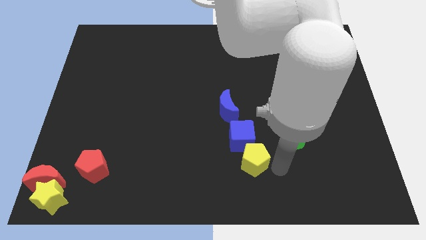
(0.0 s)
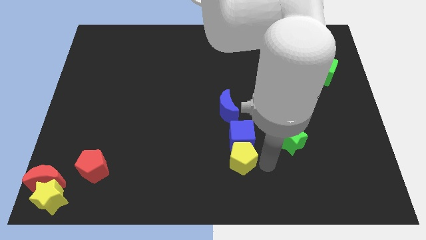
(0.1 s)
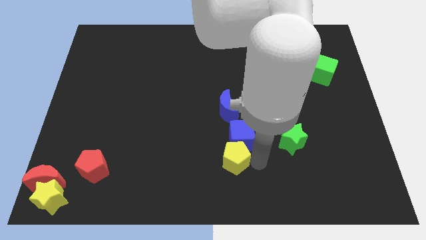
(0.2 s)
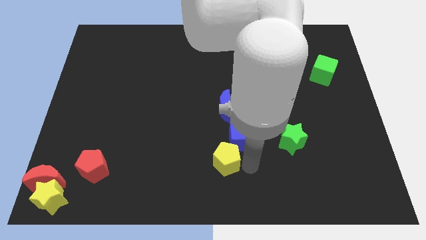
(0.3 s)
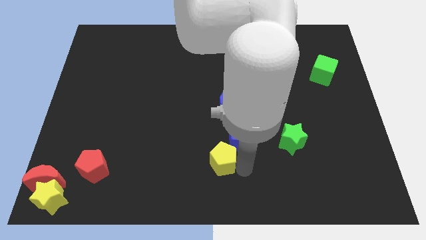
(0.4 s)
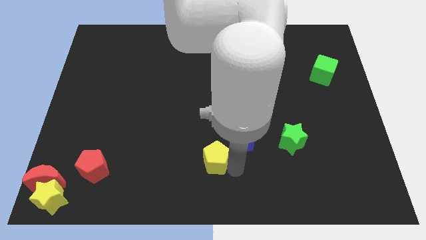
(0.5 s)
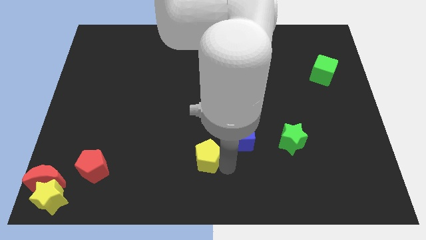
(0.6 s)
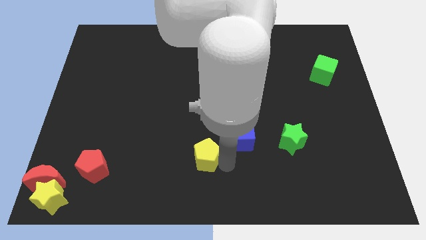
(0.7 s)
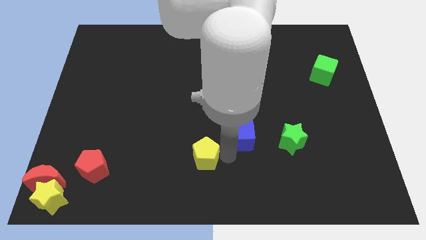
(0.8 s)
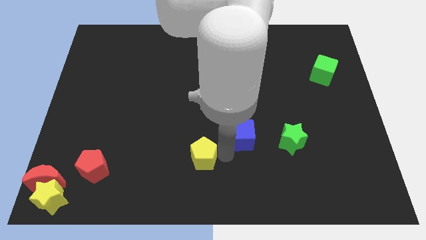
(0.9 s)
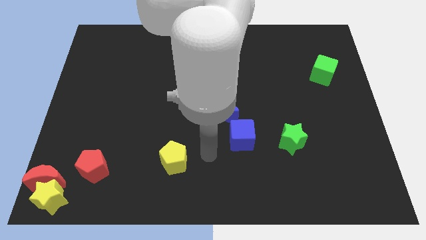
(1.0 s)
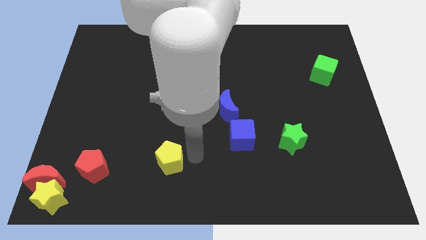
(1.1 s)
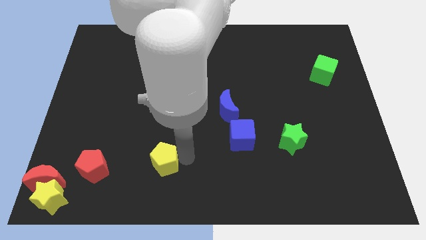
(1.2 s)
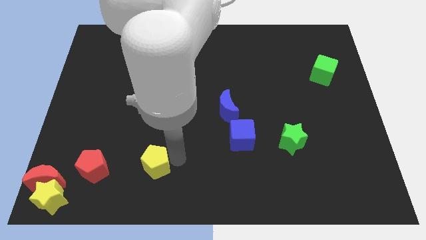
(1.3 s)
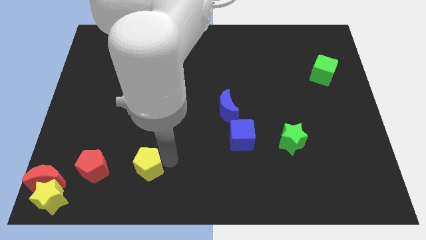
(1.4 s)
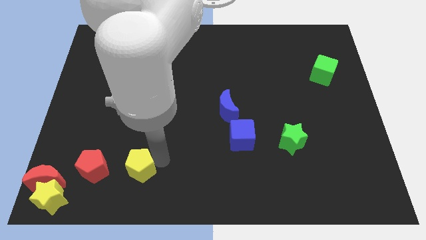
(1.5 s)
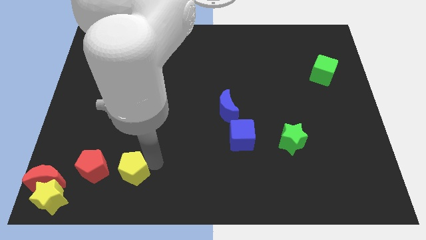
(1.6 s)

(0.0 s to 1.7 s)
push the yellow pentagon right to the red pentagon

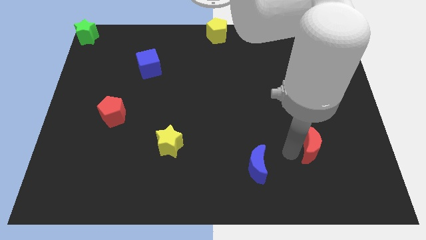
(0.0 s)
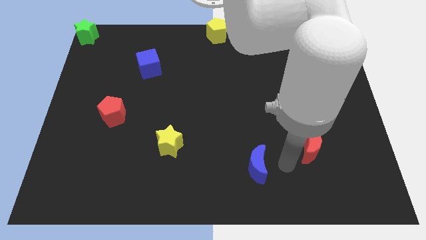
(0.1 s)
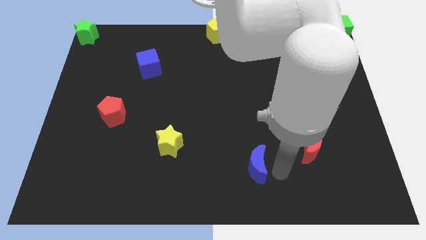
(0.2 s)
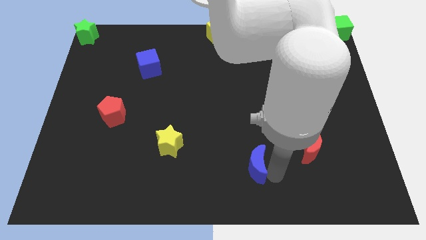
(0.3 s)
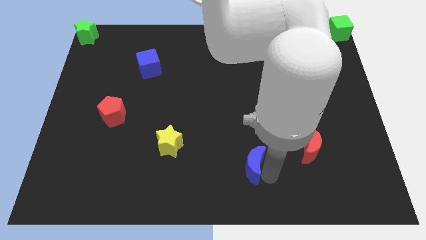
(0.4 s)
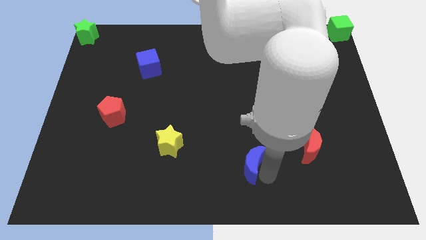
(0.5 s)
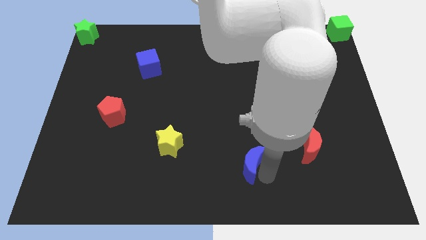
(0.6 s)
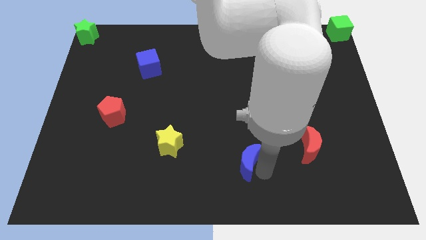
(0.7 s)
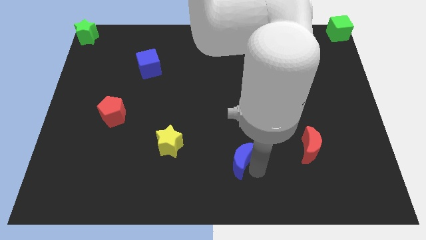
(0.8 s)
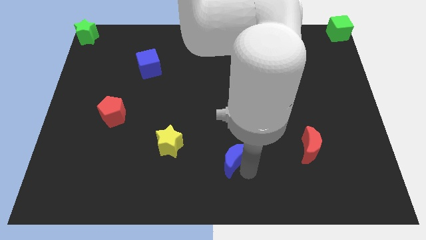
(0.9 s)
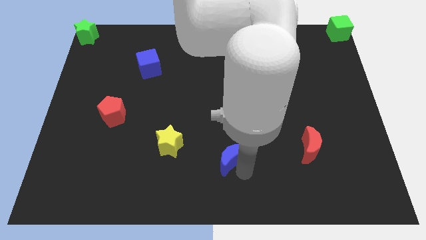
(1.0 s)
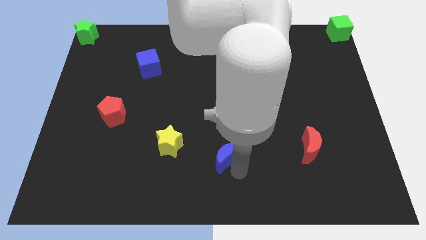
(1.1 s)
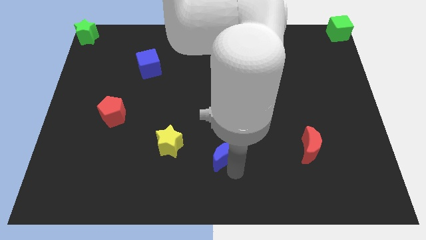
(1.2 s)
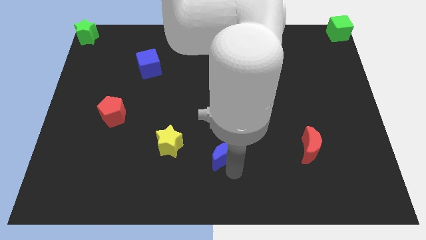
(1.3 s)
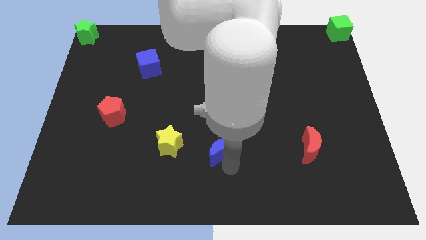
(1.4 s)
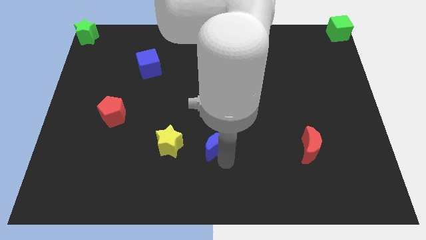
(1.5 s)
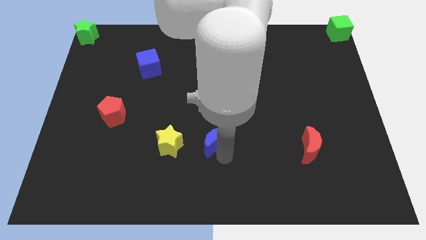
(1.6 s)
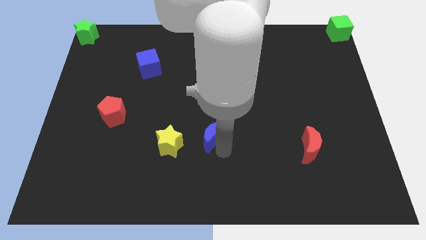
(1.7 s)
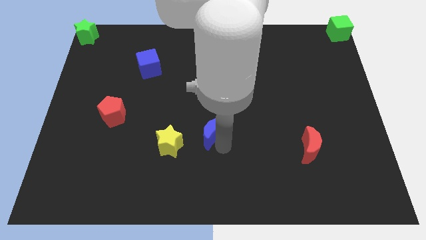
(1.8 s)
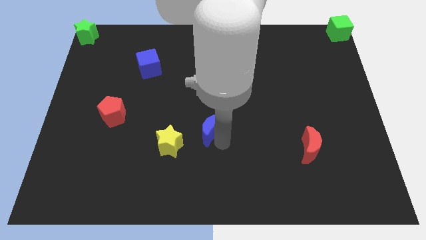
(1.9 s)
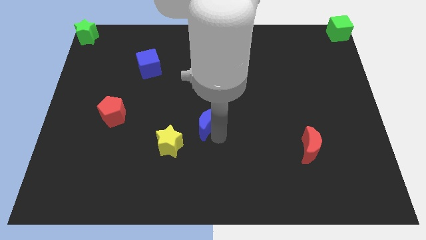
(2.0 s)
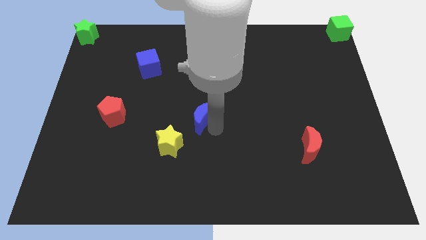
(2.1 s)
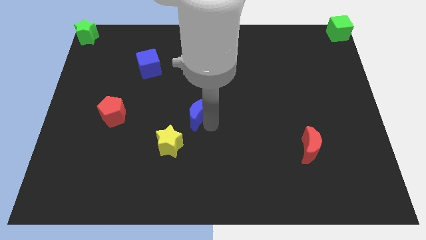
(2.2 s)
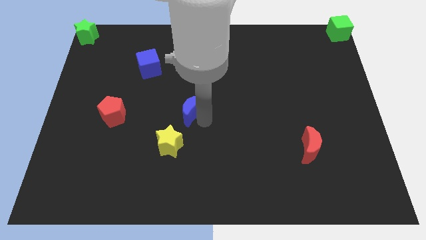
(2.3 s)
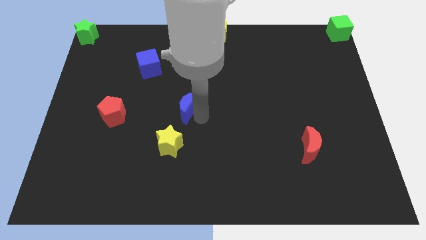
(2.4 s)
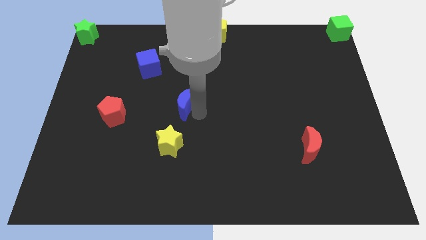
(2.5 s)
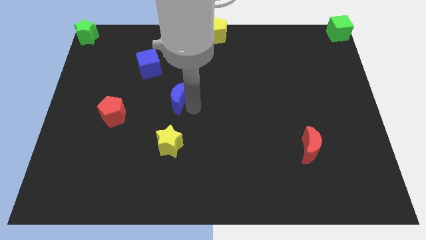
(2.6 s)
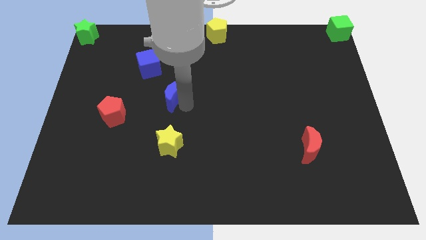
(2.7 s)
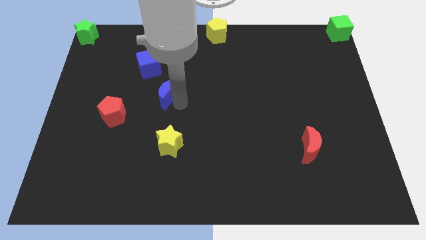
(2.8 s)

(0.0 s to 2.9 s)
move the blue crescent to the top of the yellow star

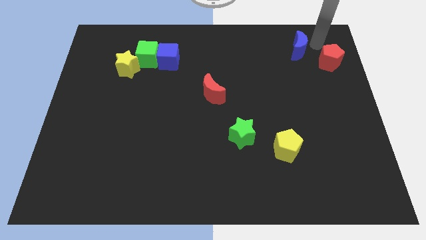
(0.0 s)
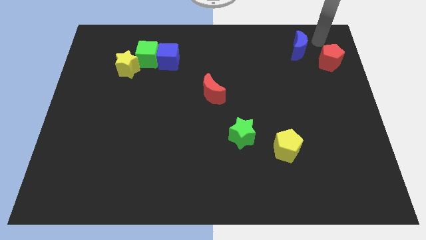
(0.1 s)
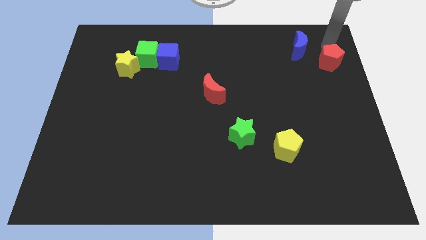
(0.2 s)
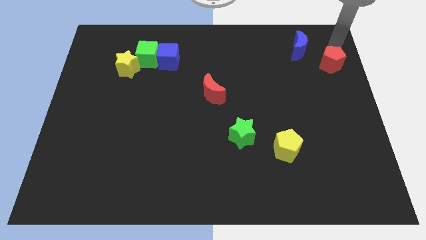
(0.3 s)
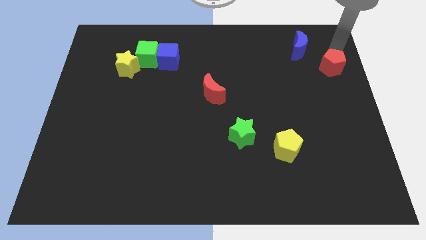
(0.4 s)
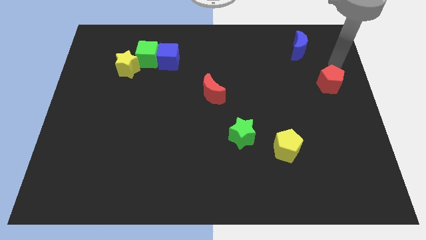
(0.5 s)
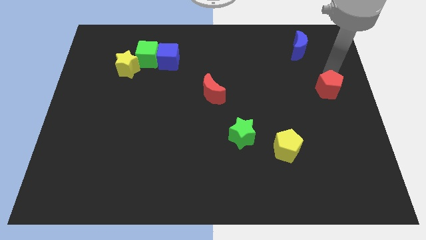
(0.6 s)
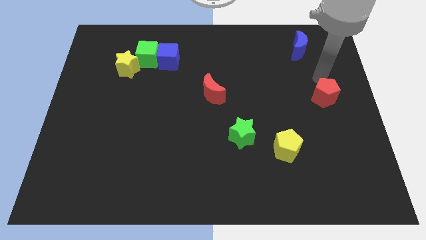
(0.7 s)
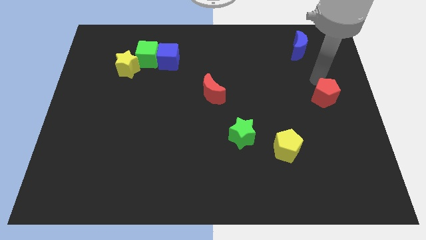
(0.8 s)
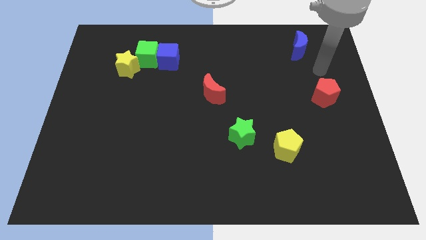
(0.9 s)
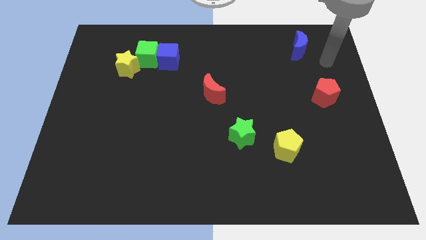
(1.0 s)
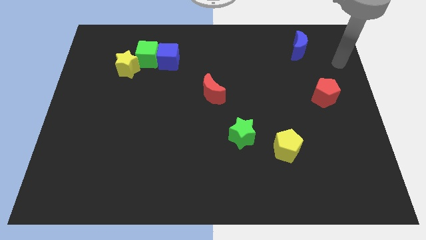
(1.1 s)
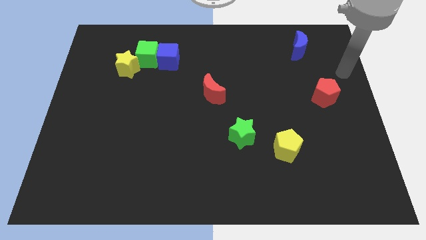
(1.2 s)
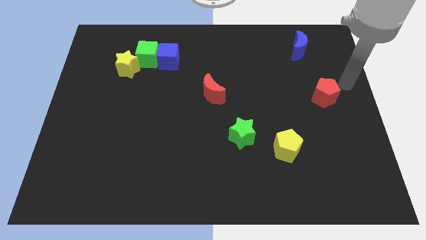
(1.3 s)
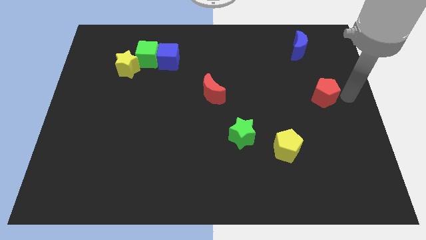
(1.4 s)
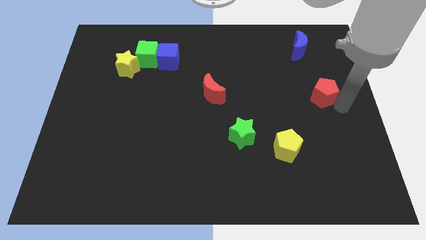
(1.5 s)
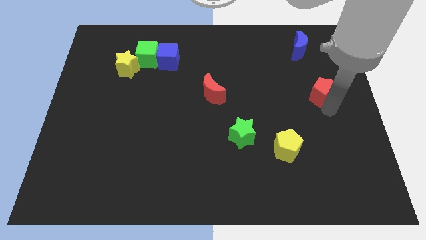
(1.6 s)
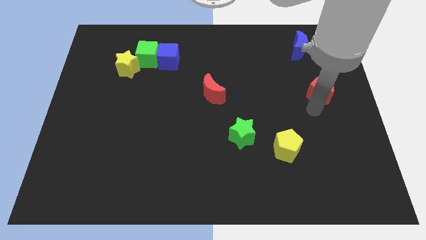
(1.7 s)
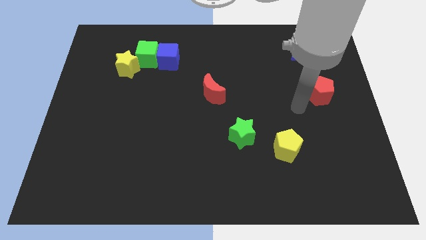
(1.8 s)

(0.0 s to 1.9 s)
move red pentagon slightly down

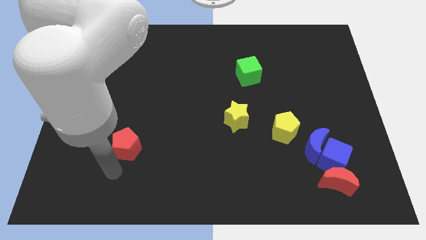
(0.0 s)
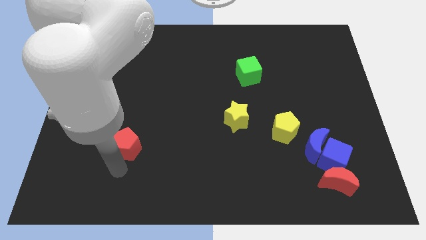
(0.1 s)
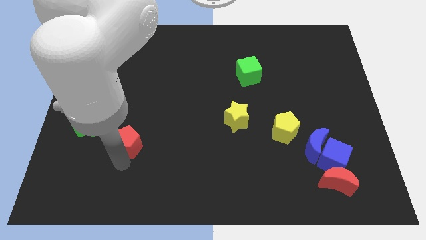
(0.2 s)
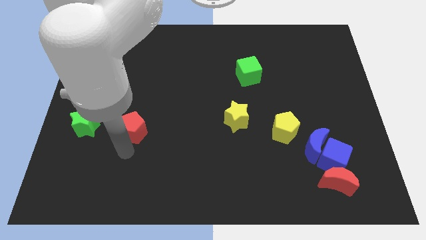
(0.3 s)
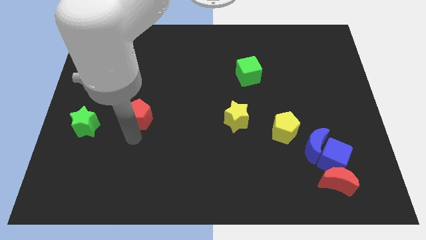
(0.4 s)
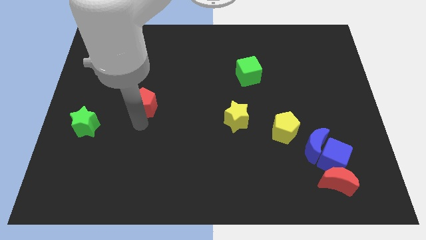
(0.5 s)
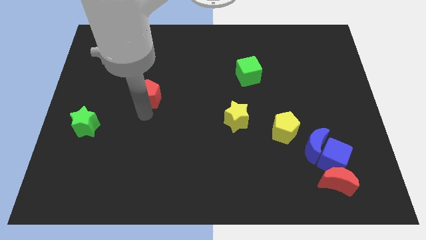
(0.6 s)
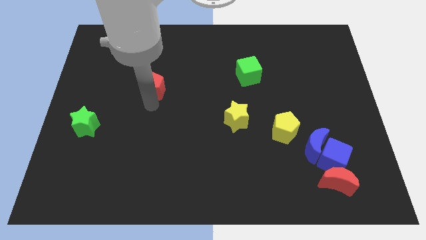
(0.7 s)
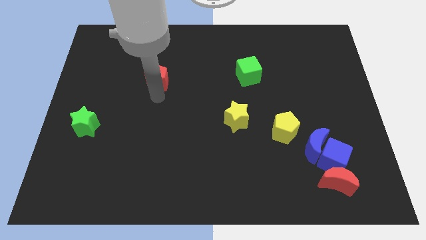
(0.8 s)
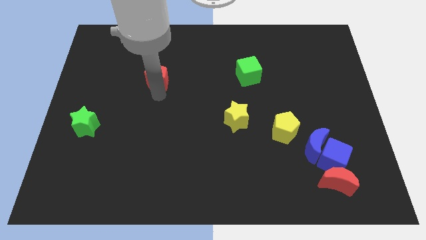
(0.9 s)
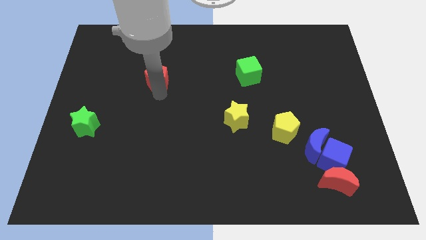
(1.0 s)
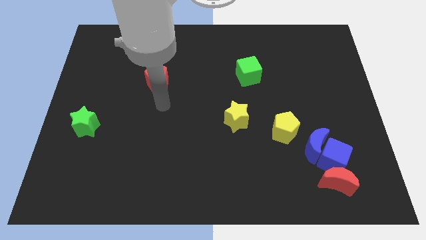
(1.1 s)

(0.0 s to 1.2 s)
push the red pentagon diagonally on the top left side of the yellow star

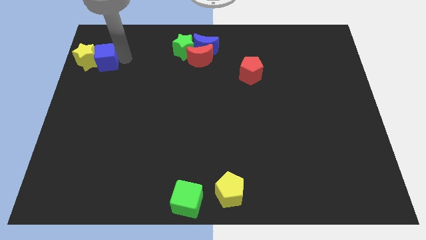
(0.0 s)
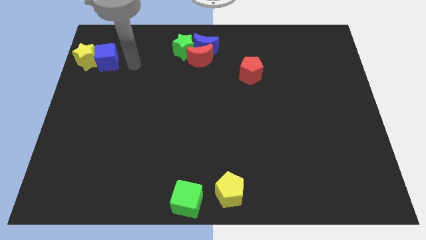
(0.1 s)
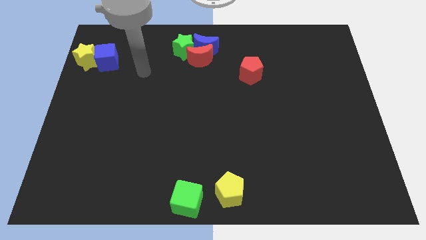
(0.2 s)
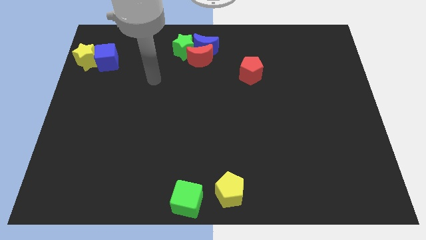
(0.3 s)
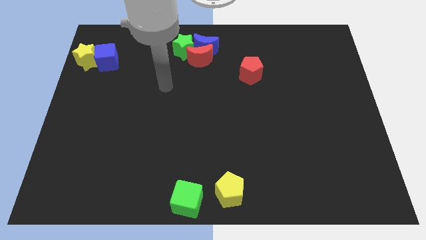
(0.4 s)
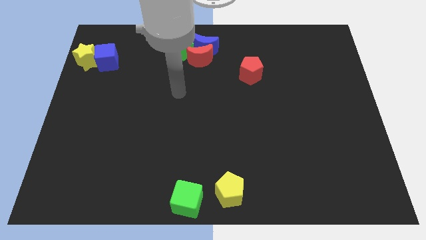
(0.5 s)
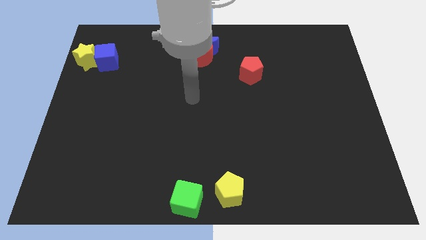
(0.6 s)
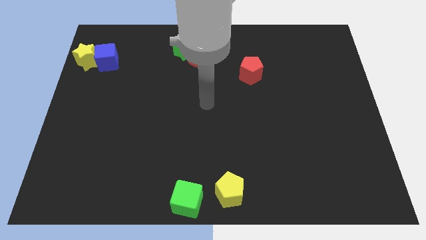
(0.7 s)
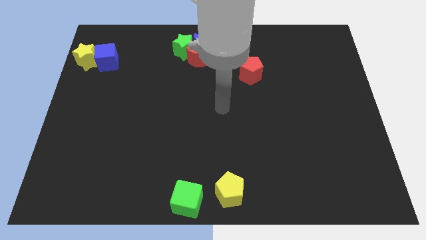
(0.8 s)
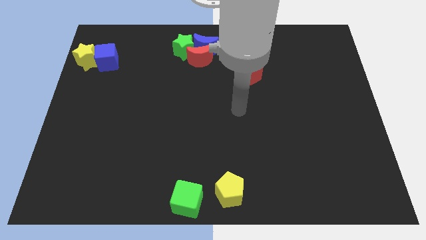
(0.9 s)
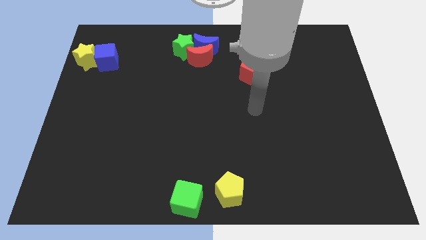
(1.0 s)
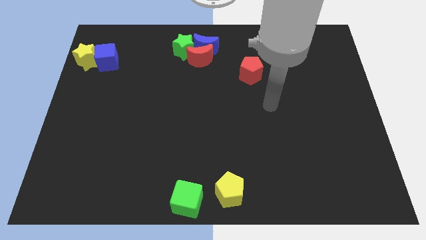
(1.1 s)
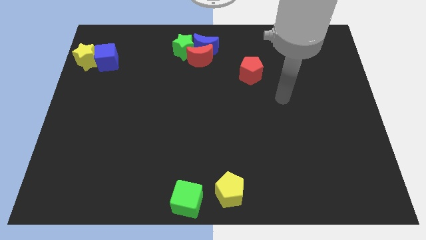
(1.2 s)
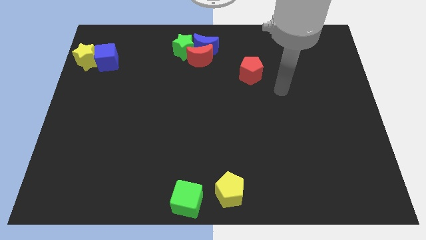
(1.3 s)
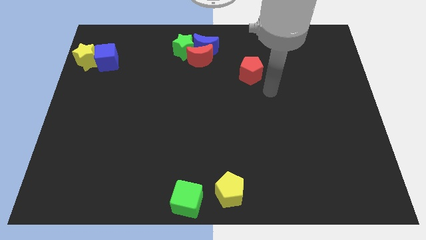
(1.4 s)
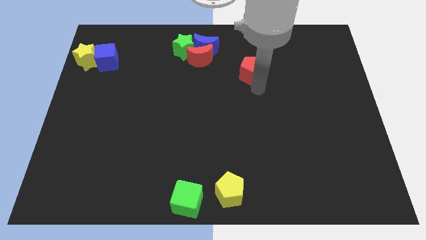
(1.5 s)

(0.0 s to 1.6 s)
point your arm at the bottom of the red pentagon
